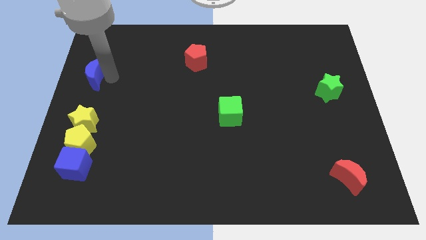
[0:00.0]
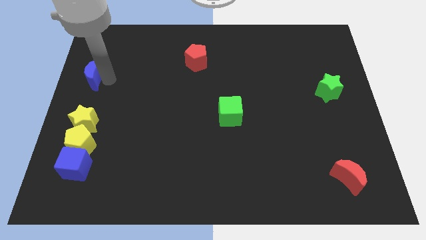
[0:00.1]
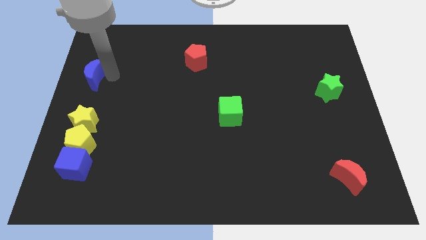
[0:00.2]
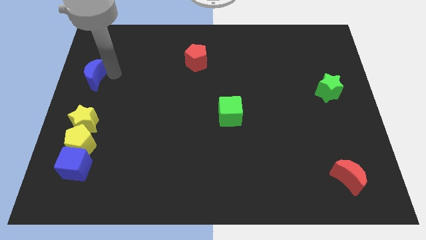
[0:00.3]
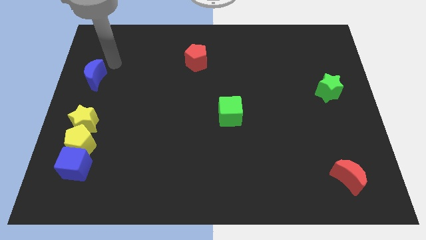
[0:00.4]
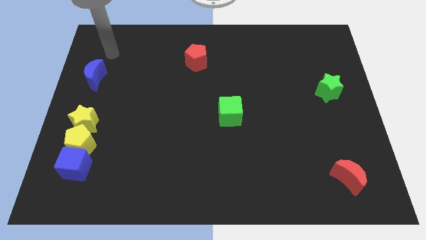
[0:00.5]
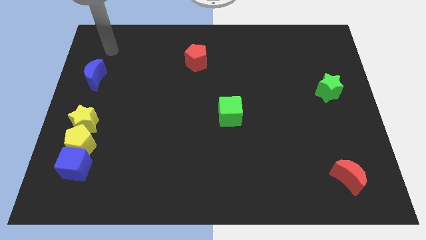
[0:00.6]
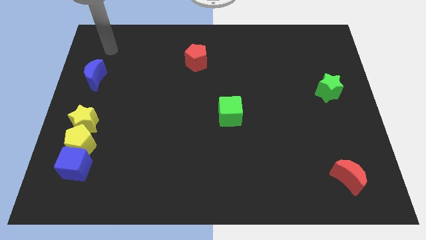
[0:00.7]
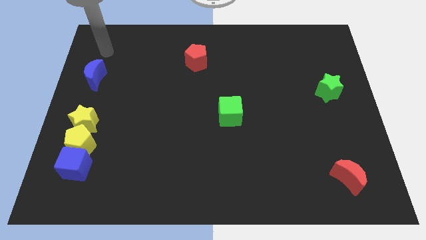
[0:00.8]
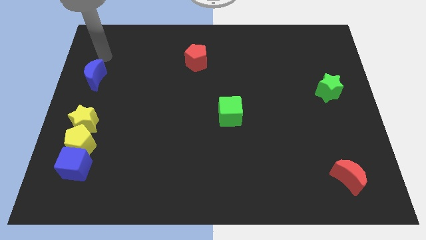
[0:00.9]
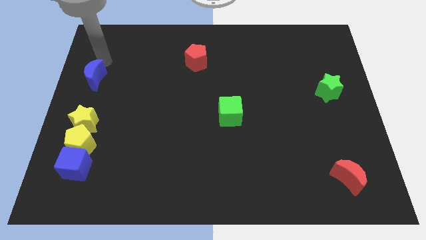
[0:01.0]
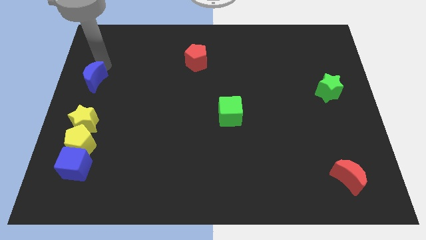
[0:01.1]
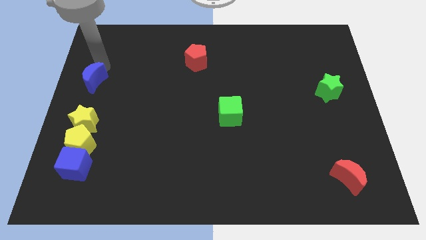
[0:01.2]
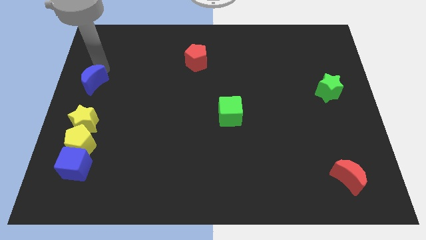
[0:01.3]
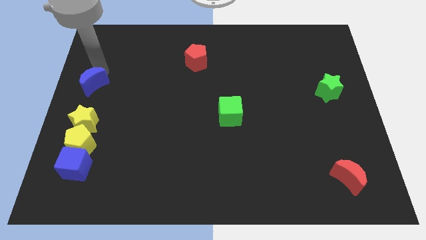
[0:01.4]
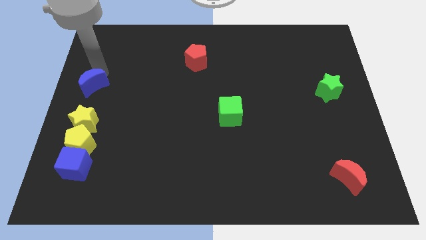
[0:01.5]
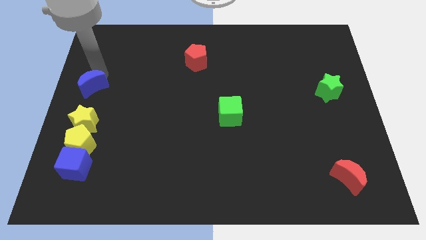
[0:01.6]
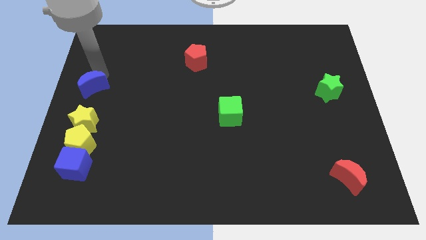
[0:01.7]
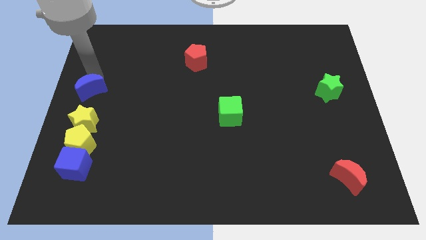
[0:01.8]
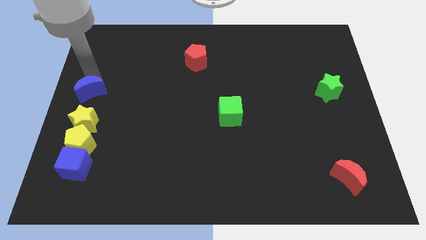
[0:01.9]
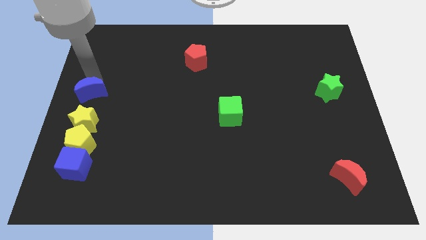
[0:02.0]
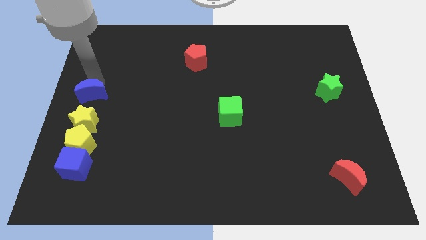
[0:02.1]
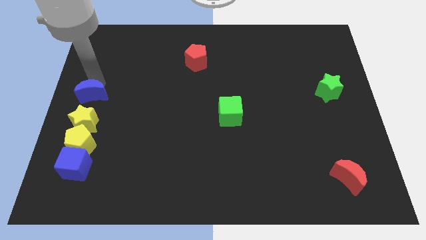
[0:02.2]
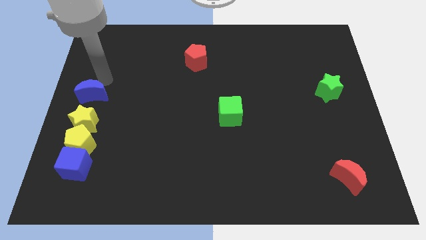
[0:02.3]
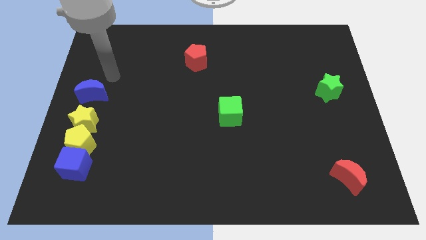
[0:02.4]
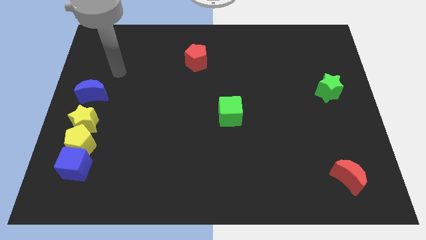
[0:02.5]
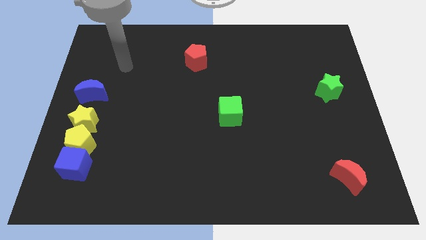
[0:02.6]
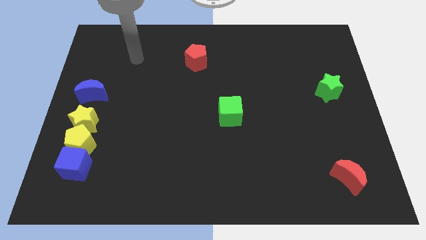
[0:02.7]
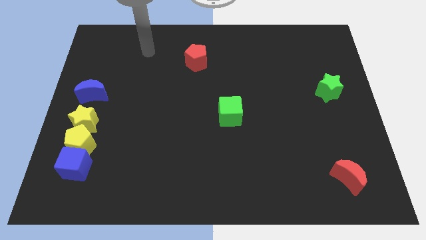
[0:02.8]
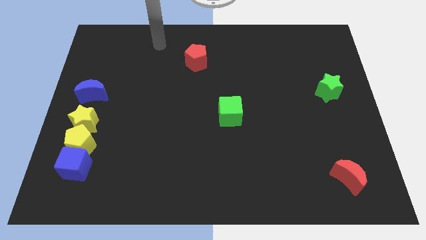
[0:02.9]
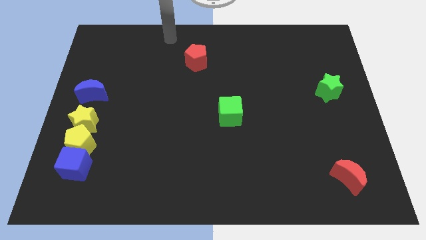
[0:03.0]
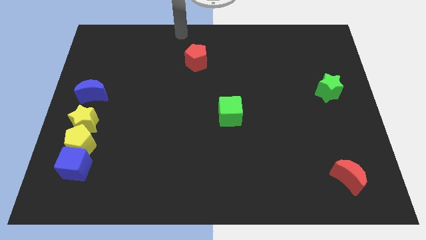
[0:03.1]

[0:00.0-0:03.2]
adjust the blue crescent to the top of the yellow star vertically

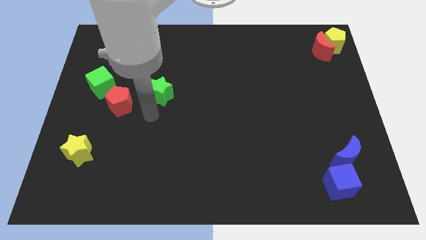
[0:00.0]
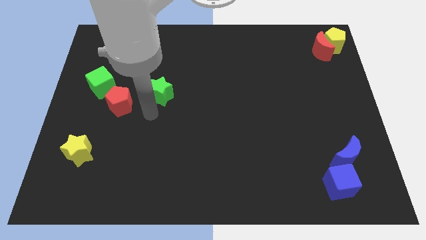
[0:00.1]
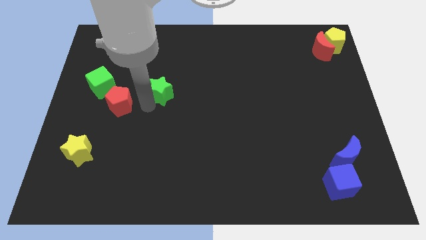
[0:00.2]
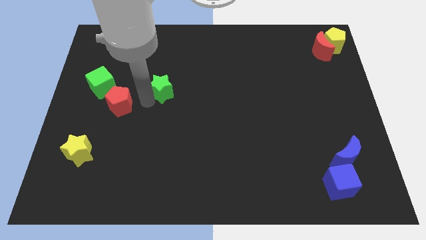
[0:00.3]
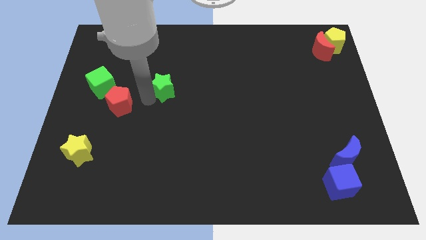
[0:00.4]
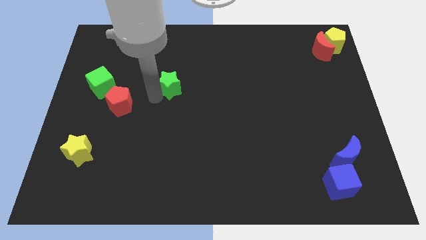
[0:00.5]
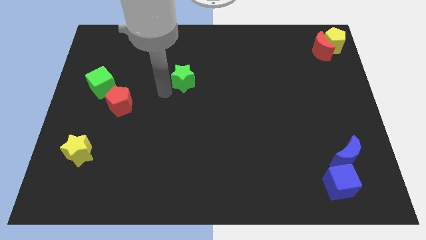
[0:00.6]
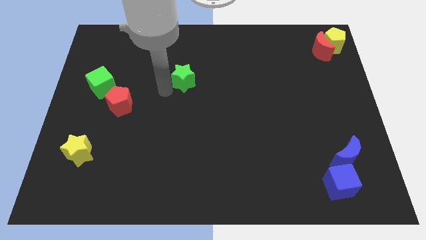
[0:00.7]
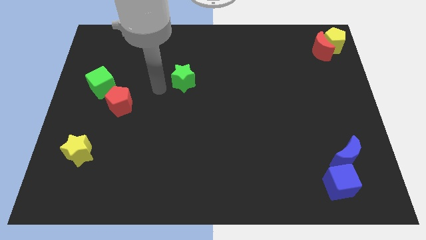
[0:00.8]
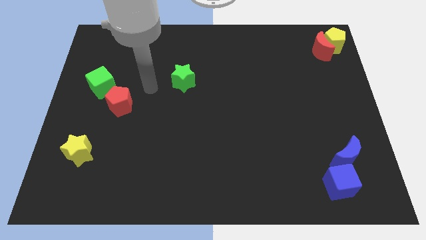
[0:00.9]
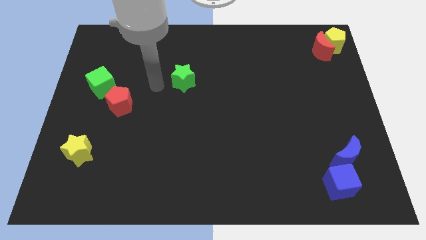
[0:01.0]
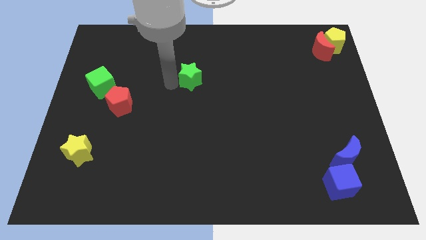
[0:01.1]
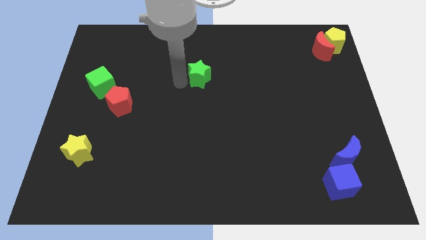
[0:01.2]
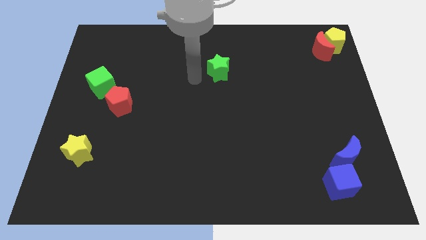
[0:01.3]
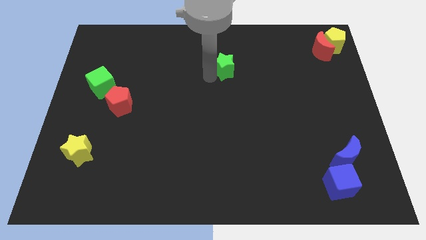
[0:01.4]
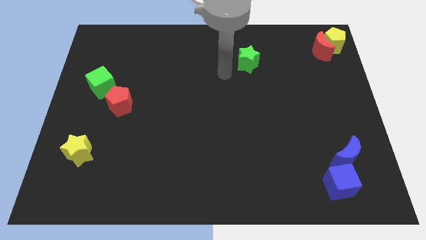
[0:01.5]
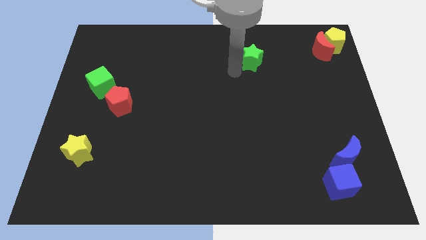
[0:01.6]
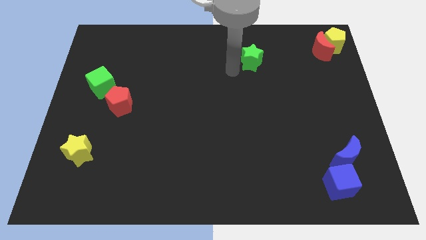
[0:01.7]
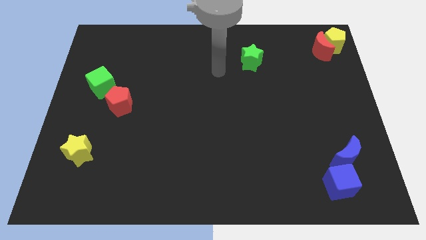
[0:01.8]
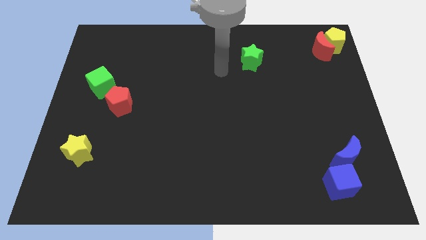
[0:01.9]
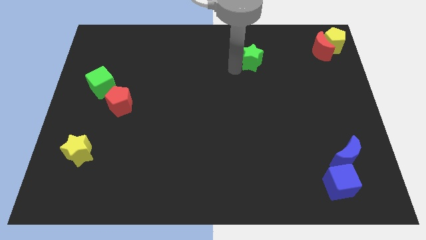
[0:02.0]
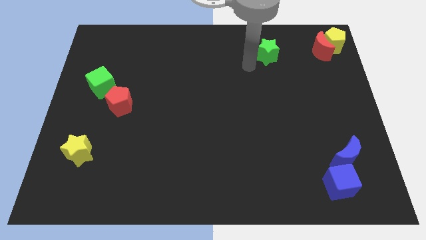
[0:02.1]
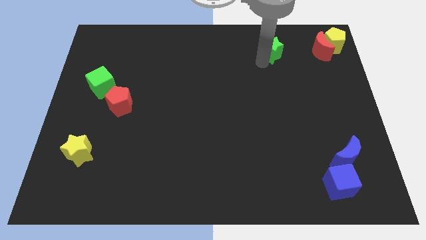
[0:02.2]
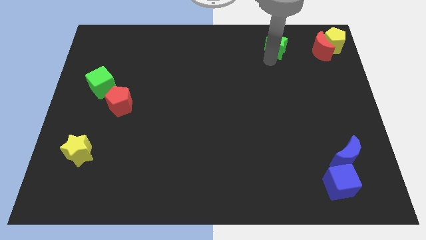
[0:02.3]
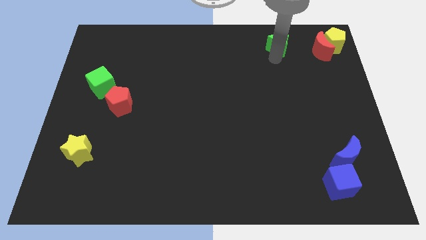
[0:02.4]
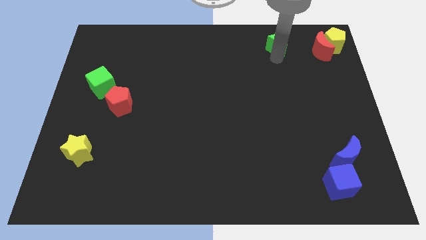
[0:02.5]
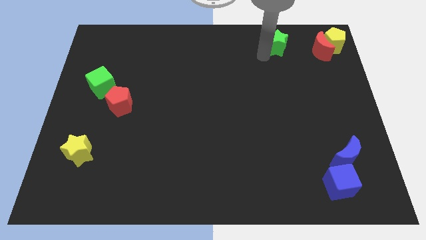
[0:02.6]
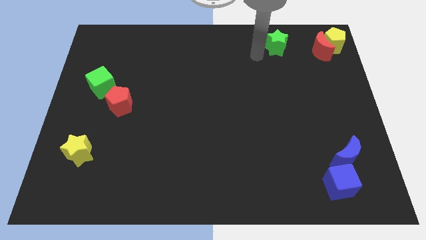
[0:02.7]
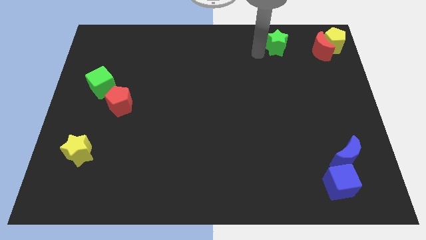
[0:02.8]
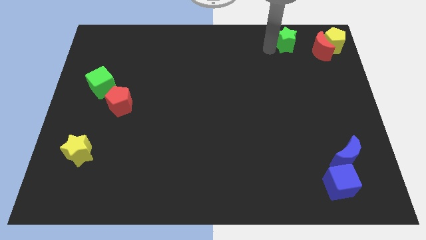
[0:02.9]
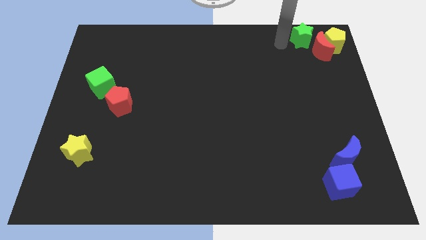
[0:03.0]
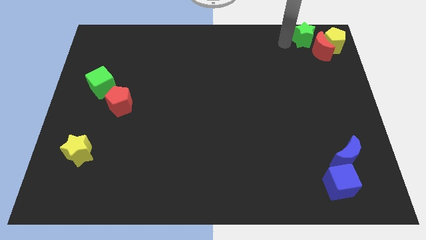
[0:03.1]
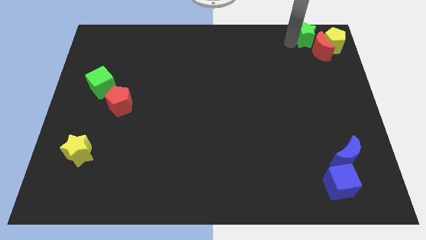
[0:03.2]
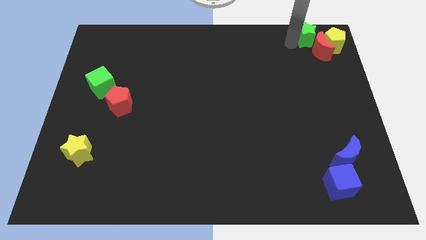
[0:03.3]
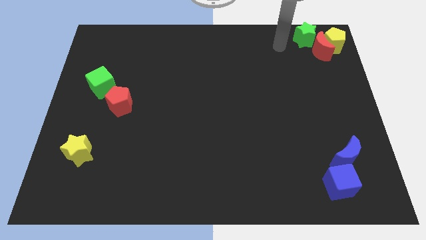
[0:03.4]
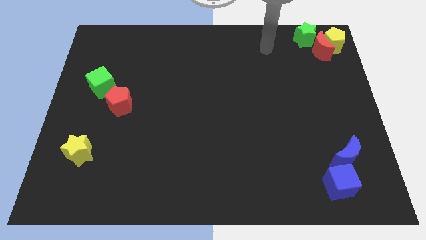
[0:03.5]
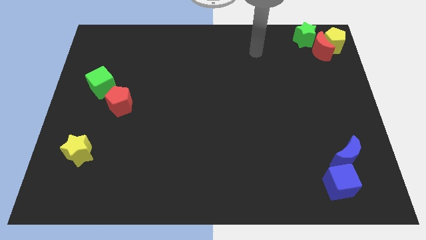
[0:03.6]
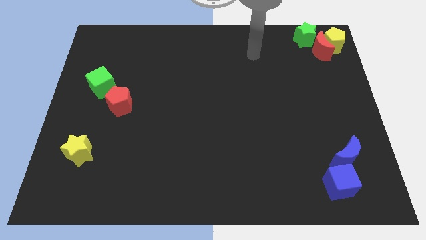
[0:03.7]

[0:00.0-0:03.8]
push the green star to the top left side of the red crescent

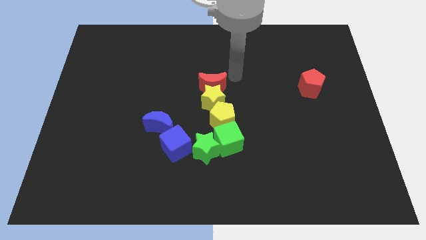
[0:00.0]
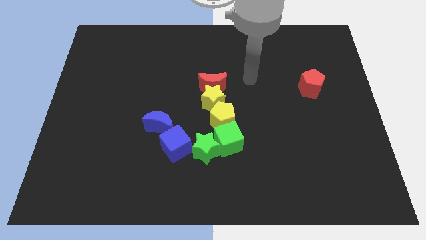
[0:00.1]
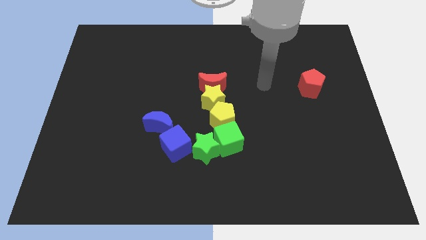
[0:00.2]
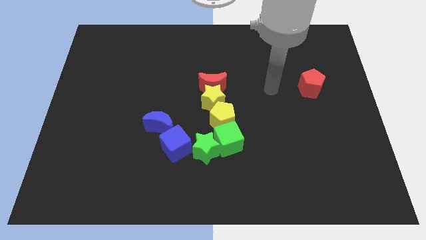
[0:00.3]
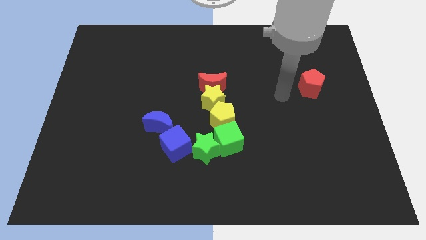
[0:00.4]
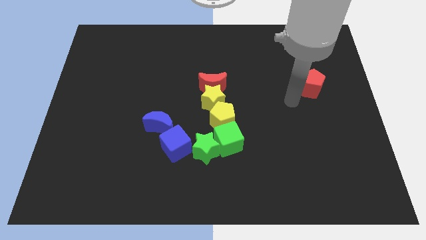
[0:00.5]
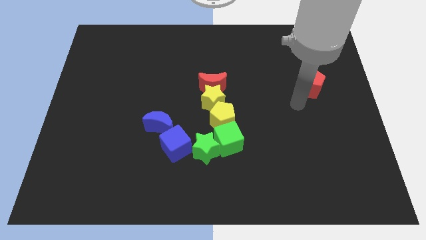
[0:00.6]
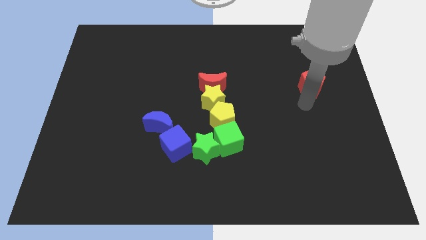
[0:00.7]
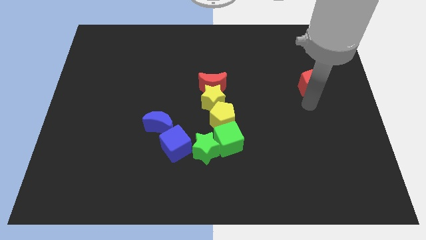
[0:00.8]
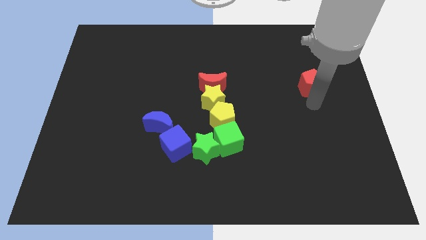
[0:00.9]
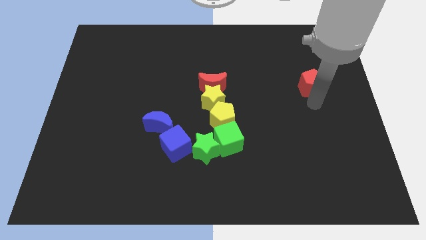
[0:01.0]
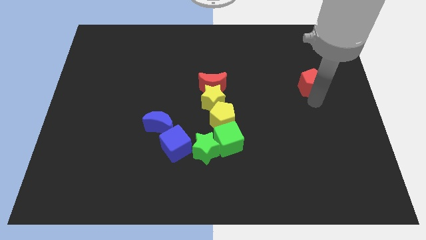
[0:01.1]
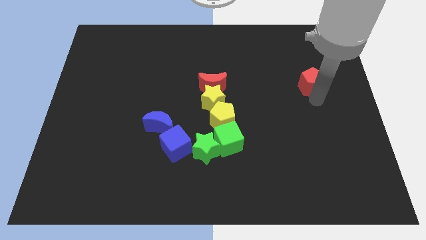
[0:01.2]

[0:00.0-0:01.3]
move the arm down to the red pentagon

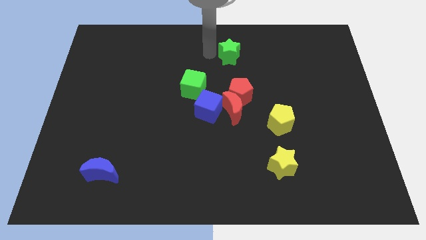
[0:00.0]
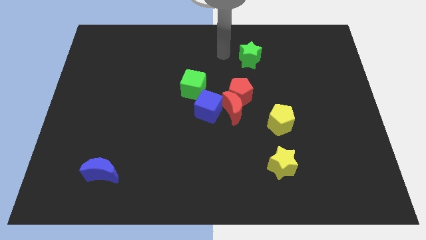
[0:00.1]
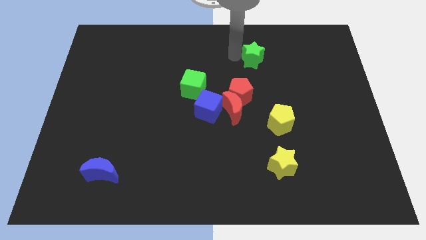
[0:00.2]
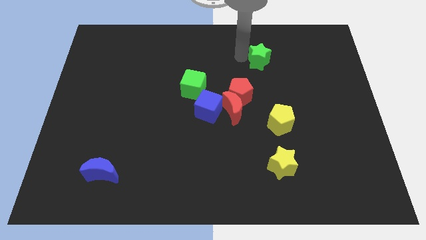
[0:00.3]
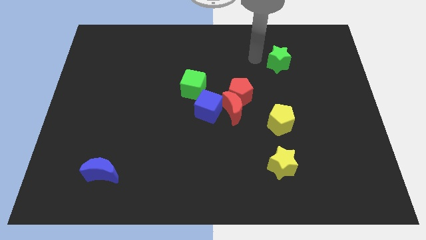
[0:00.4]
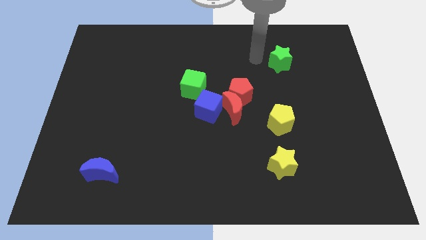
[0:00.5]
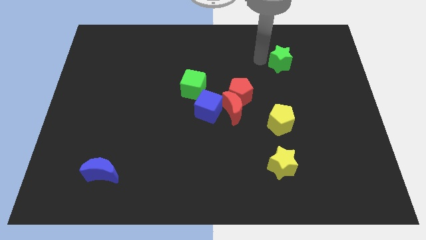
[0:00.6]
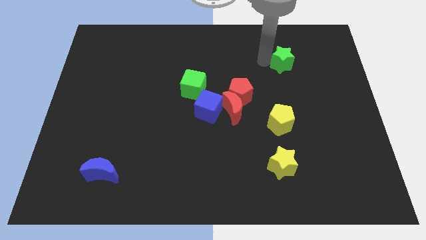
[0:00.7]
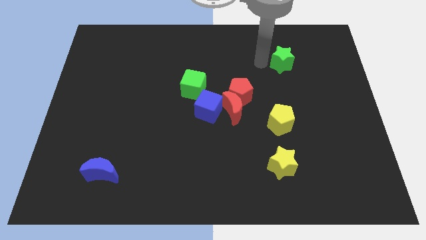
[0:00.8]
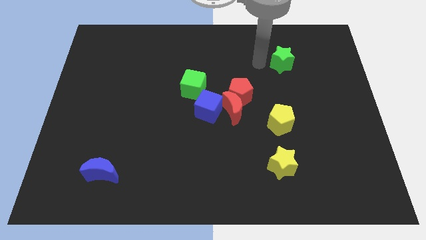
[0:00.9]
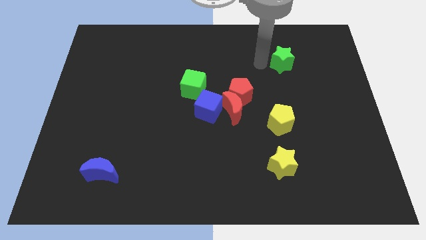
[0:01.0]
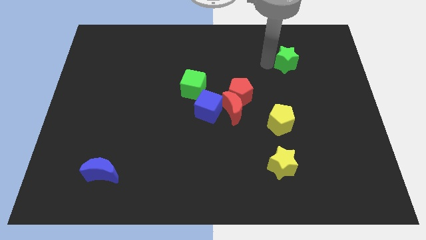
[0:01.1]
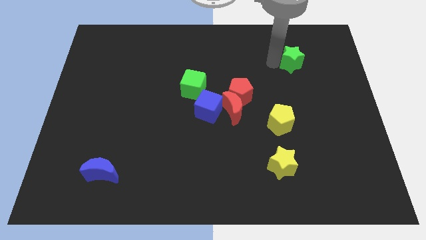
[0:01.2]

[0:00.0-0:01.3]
move the green star to the right side of the board
